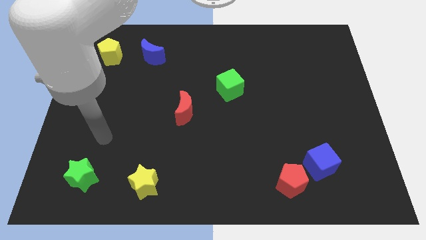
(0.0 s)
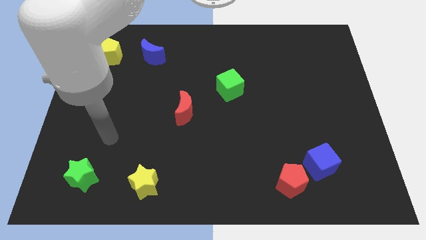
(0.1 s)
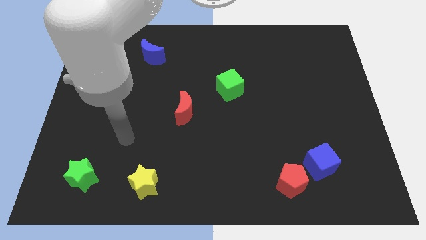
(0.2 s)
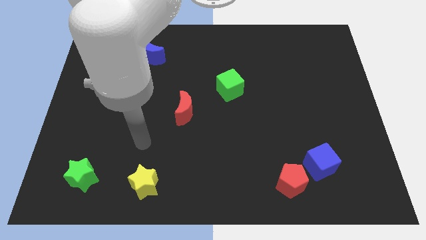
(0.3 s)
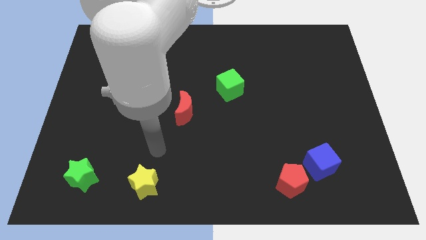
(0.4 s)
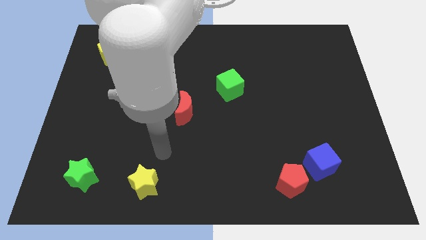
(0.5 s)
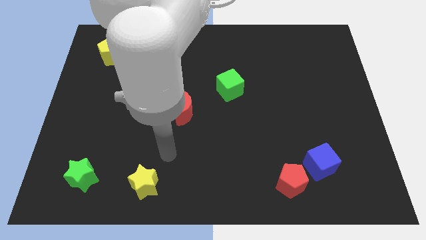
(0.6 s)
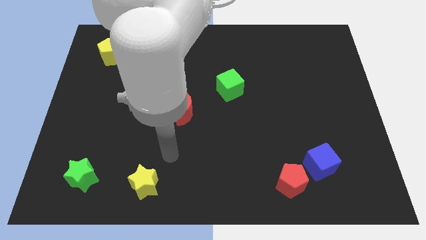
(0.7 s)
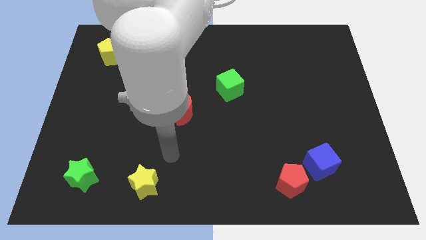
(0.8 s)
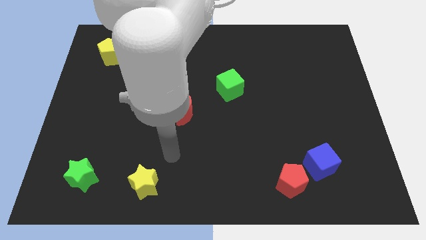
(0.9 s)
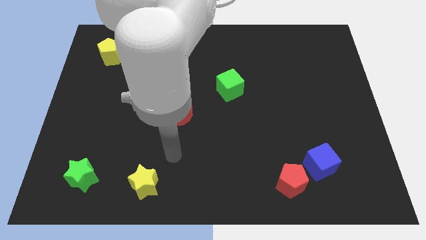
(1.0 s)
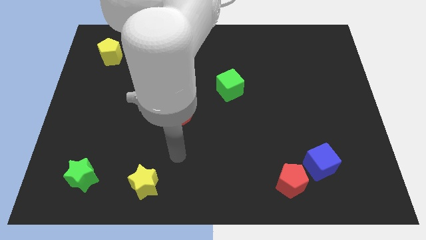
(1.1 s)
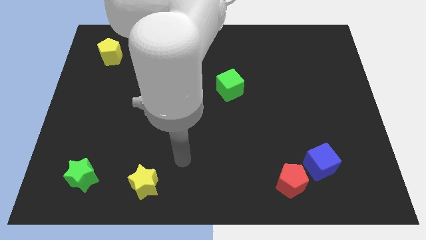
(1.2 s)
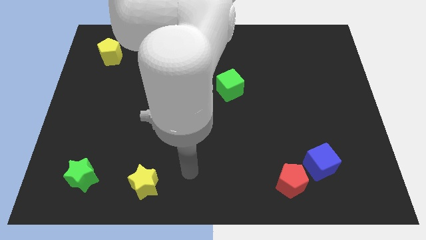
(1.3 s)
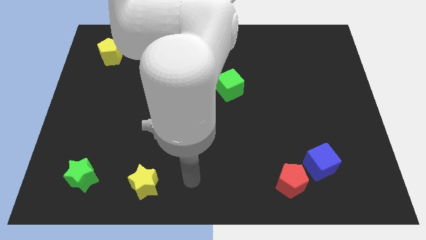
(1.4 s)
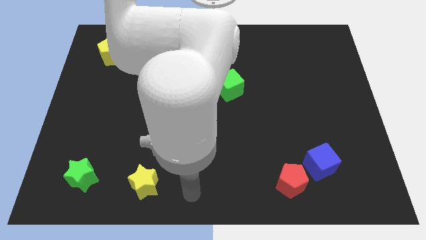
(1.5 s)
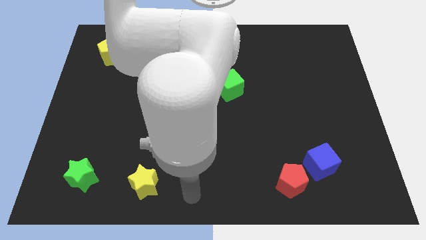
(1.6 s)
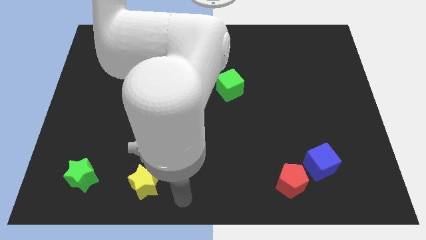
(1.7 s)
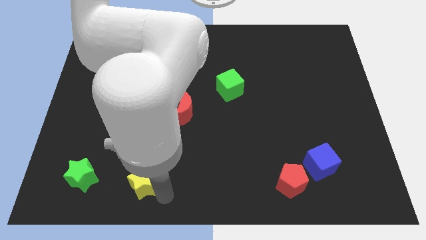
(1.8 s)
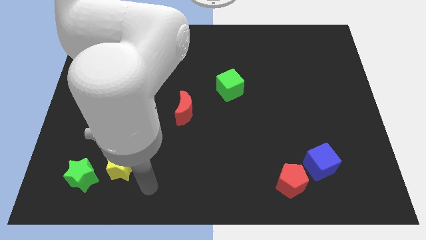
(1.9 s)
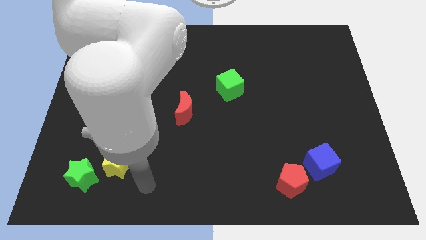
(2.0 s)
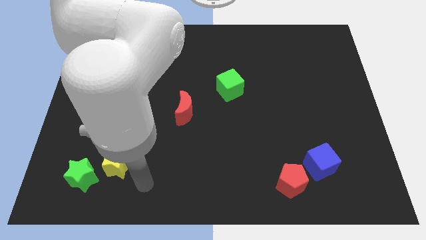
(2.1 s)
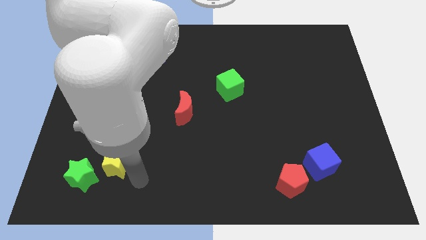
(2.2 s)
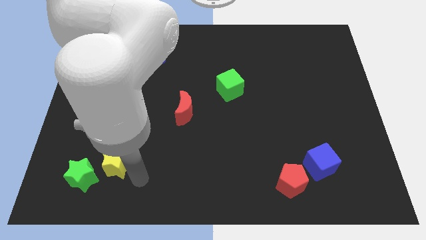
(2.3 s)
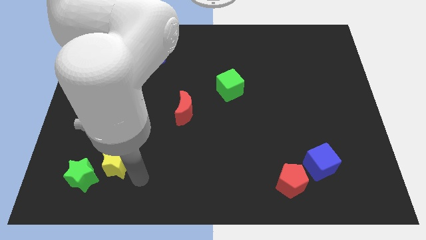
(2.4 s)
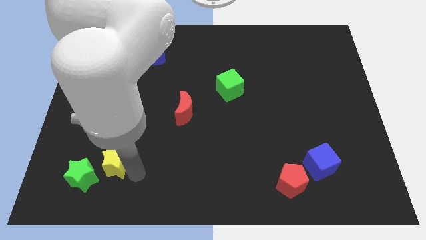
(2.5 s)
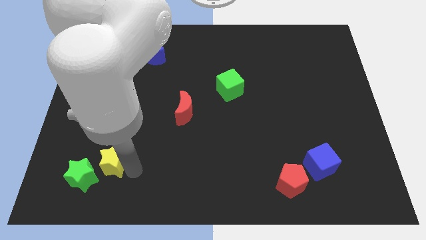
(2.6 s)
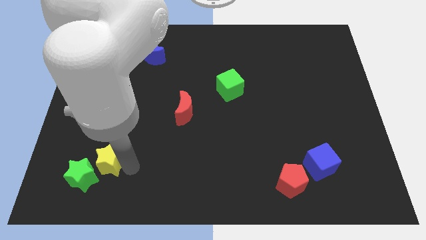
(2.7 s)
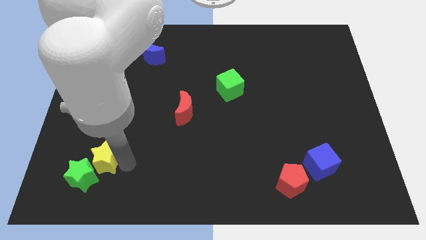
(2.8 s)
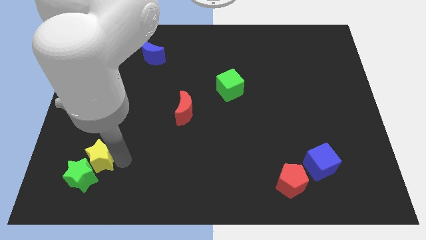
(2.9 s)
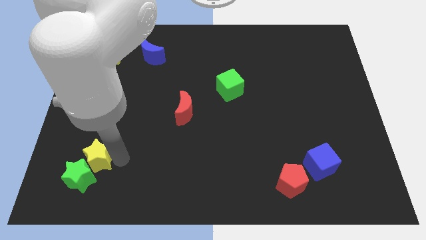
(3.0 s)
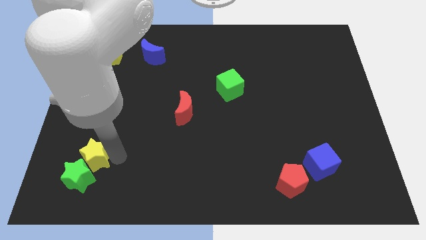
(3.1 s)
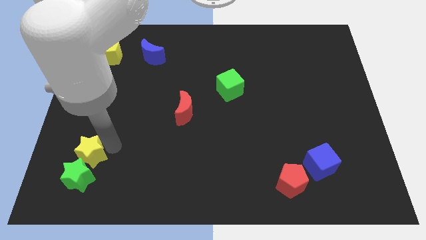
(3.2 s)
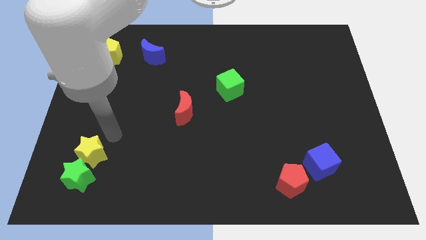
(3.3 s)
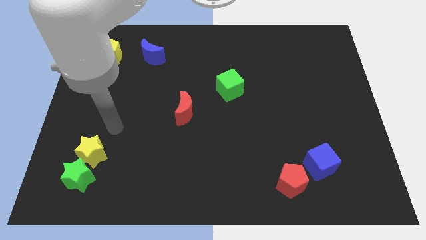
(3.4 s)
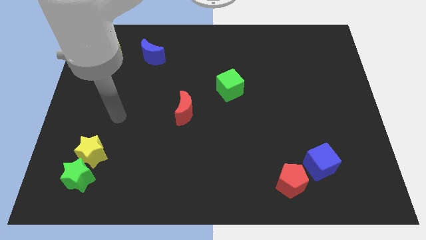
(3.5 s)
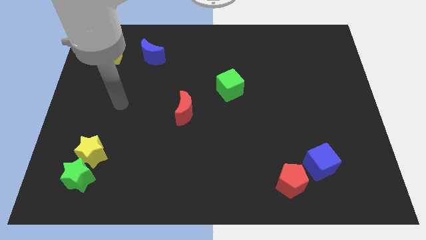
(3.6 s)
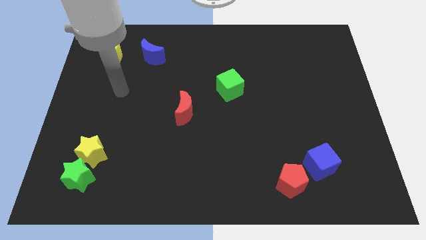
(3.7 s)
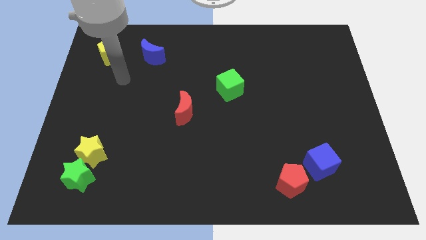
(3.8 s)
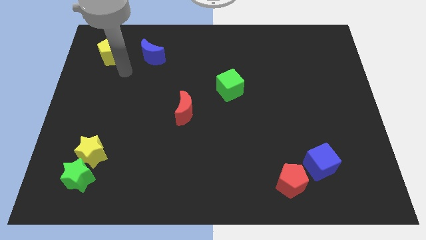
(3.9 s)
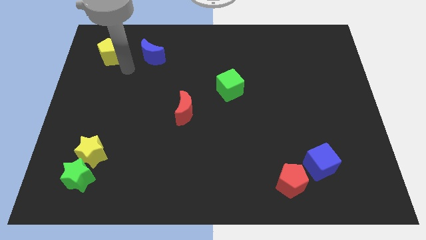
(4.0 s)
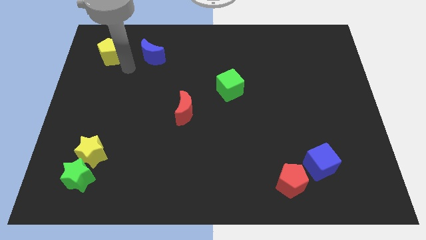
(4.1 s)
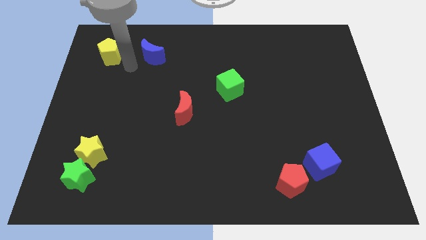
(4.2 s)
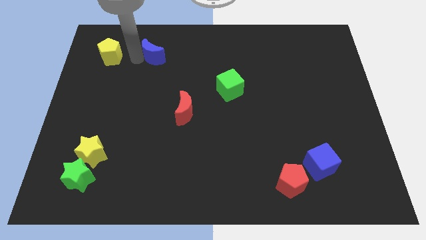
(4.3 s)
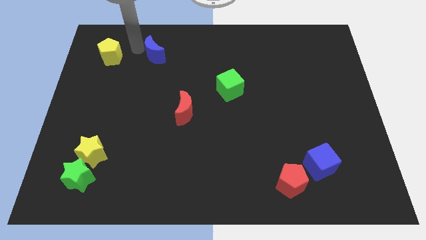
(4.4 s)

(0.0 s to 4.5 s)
place the yellow star on top of the green star

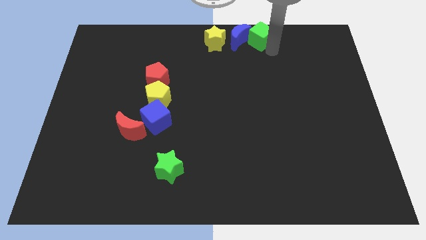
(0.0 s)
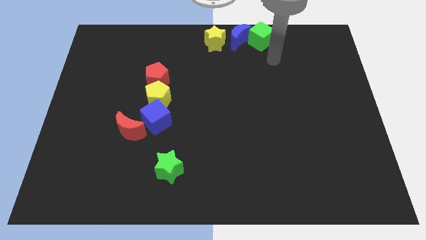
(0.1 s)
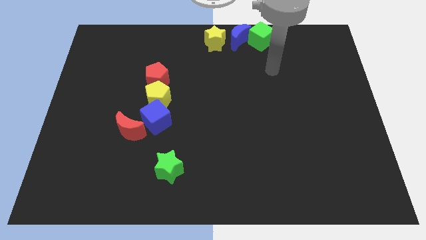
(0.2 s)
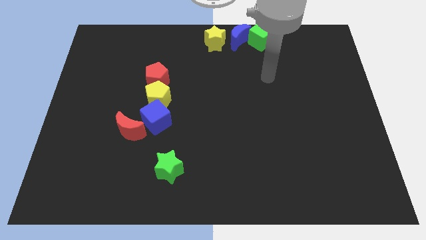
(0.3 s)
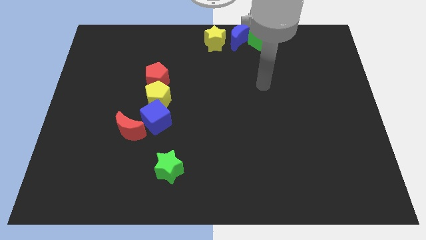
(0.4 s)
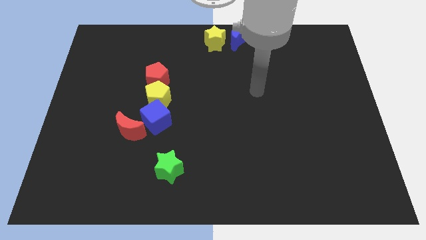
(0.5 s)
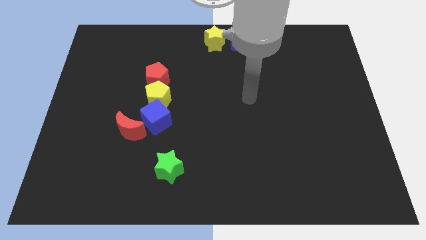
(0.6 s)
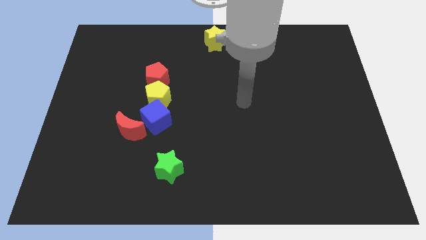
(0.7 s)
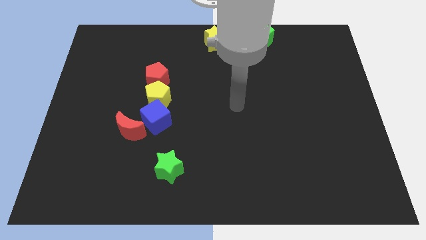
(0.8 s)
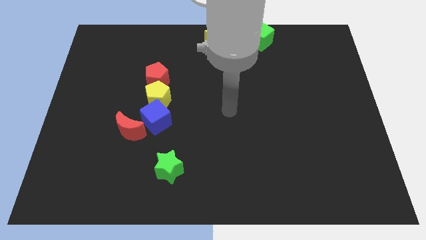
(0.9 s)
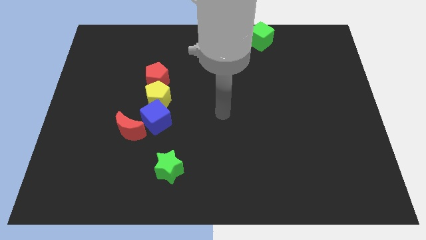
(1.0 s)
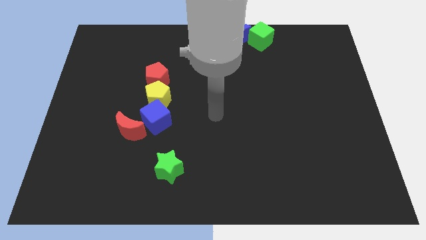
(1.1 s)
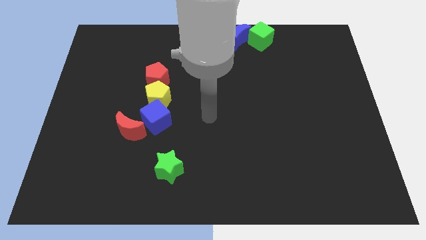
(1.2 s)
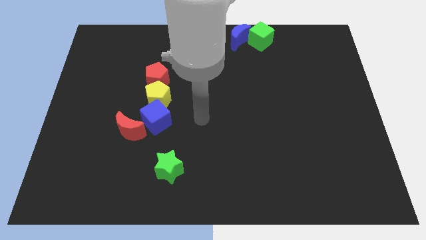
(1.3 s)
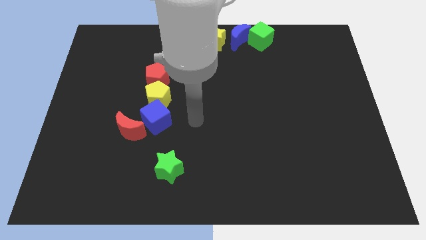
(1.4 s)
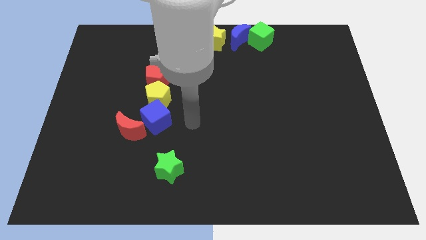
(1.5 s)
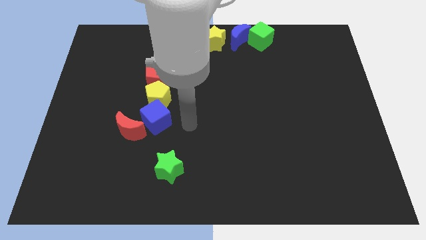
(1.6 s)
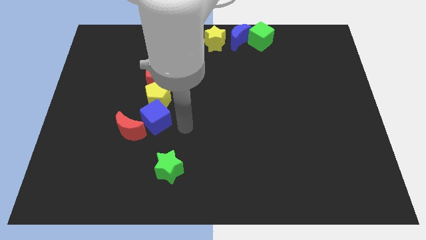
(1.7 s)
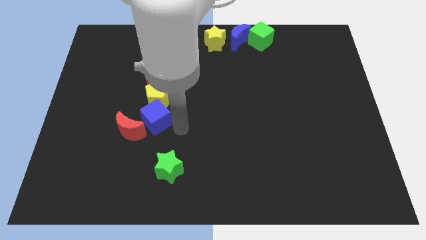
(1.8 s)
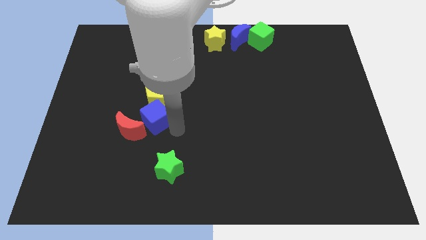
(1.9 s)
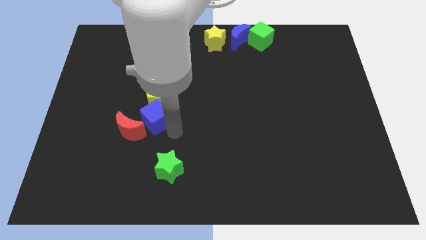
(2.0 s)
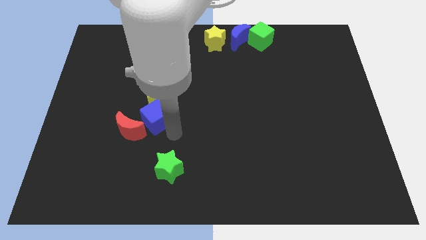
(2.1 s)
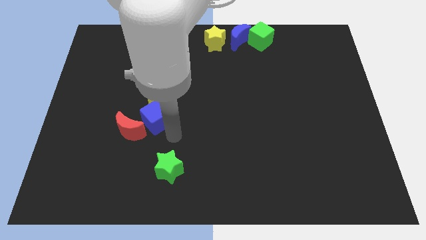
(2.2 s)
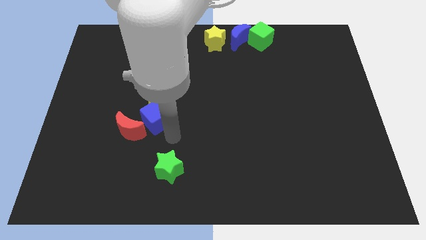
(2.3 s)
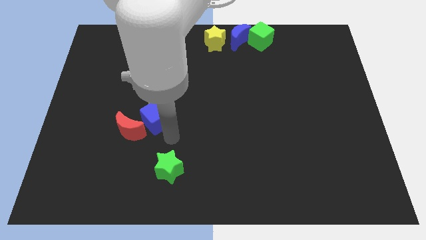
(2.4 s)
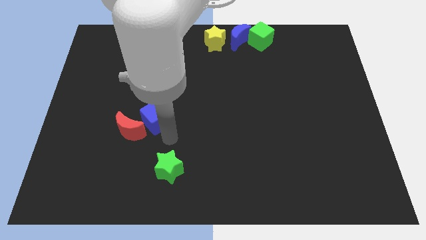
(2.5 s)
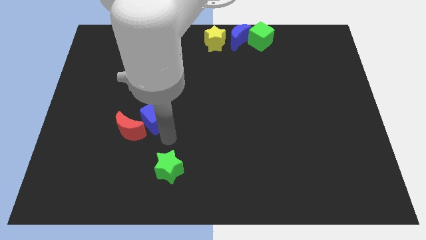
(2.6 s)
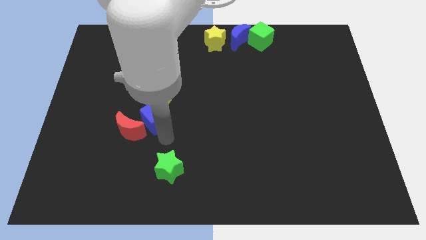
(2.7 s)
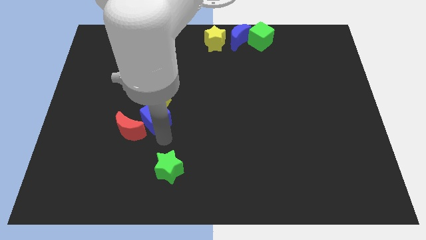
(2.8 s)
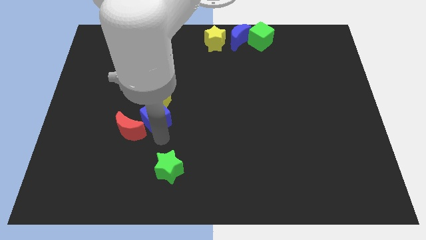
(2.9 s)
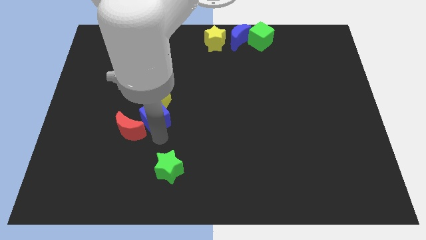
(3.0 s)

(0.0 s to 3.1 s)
move your arm to the bottom right of the blue cube

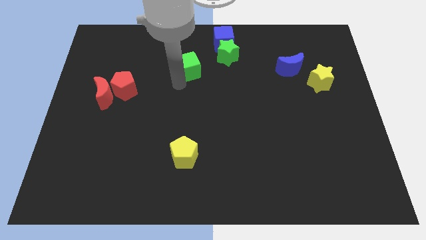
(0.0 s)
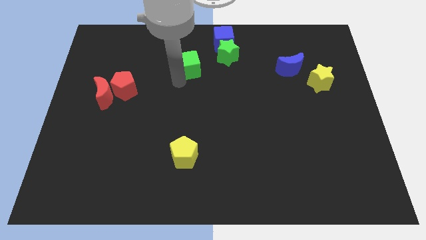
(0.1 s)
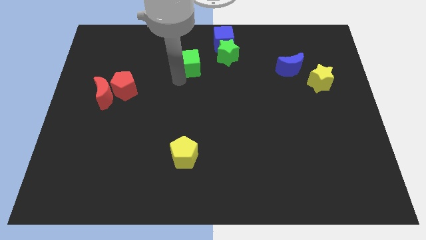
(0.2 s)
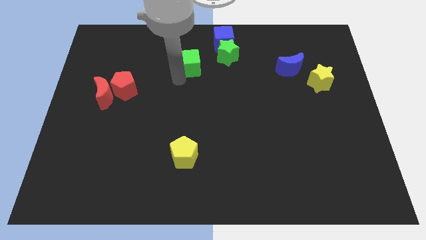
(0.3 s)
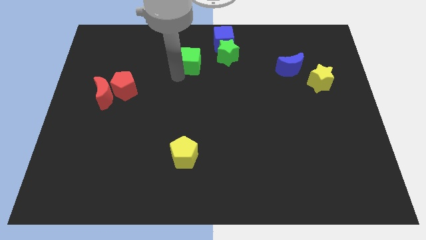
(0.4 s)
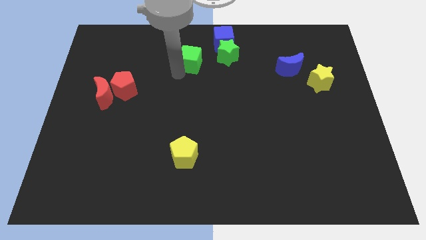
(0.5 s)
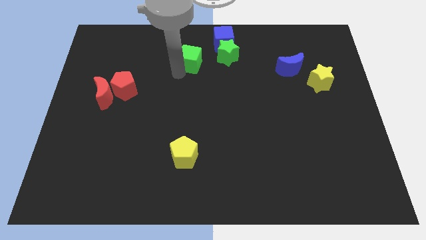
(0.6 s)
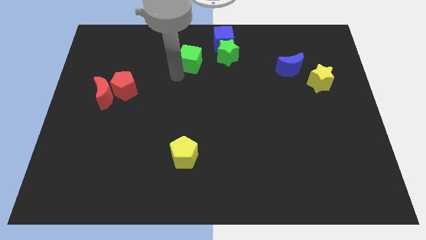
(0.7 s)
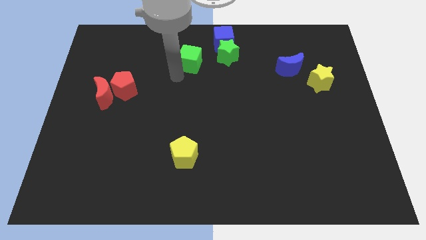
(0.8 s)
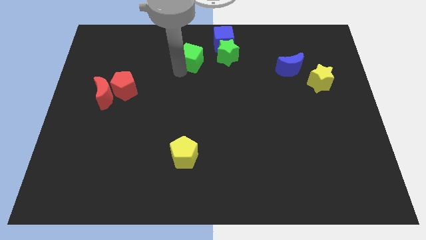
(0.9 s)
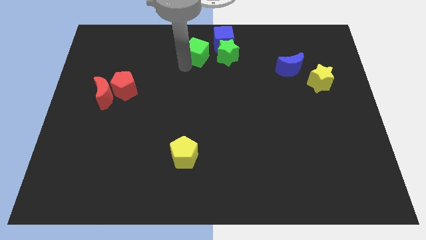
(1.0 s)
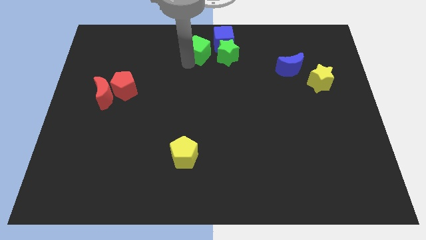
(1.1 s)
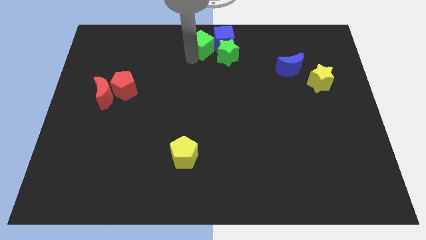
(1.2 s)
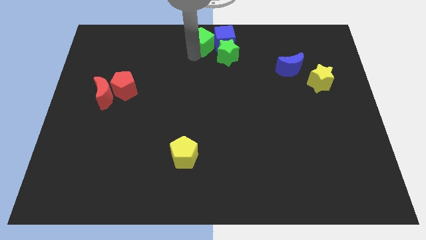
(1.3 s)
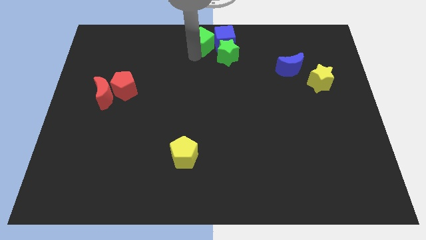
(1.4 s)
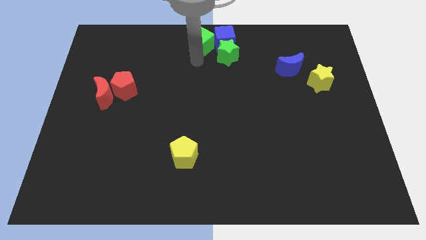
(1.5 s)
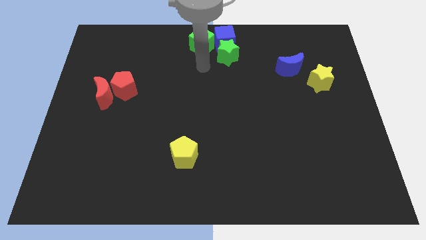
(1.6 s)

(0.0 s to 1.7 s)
put the green cube at the top center of the board
